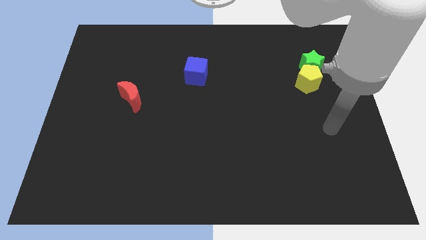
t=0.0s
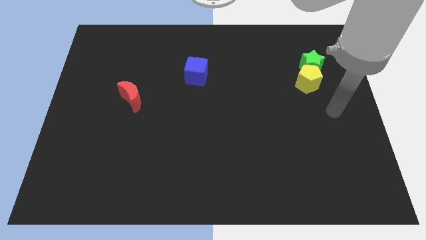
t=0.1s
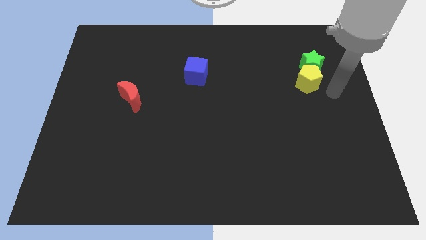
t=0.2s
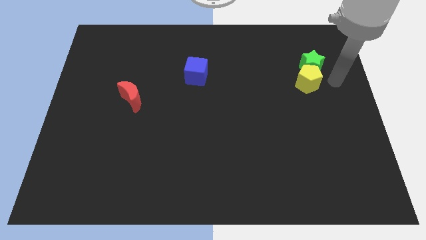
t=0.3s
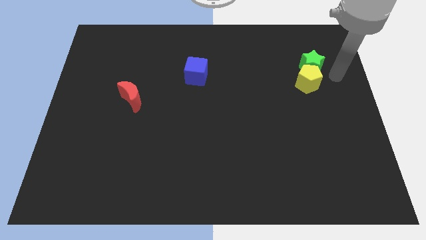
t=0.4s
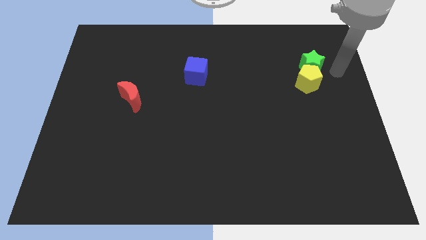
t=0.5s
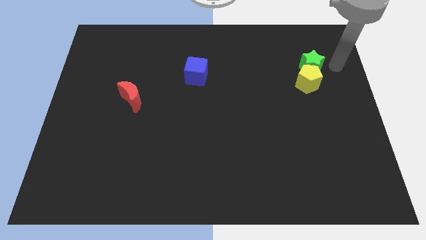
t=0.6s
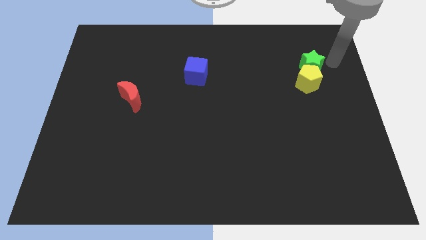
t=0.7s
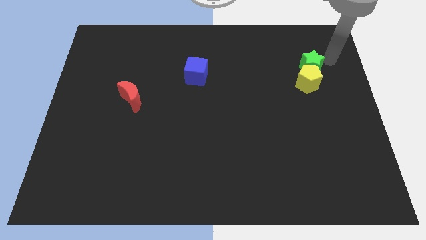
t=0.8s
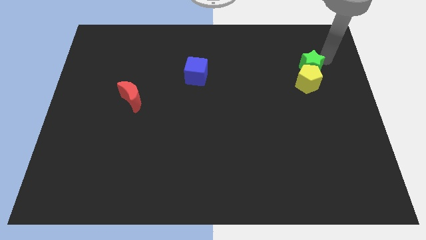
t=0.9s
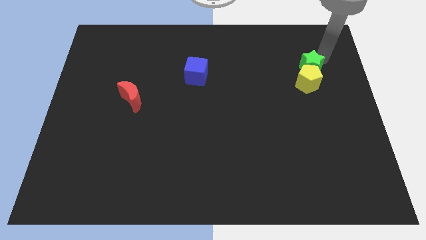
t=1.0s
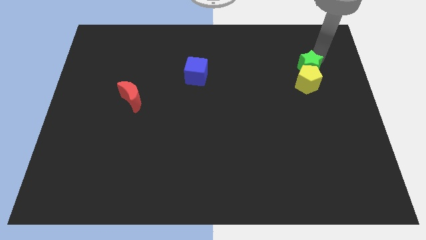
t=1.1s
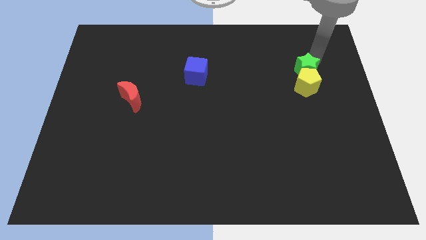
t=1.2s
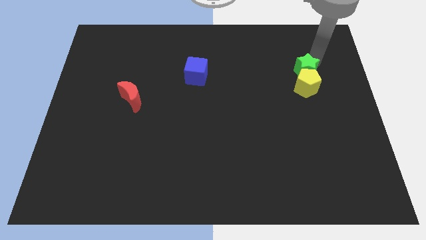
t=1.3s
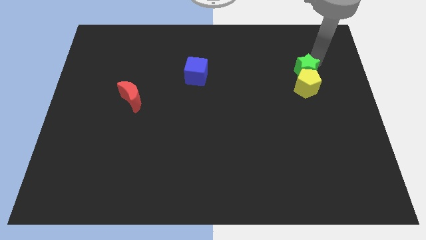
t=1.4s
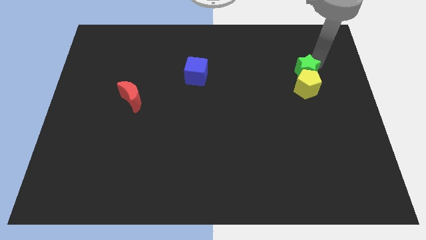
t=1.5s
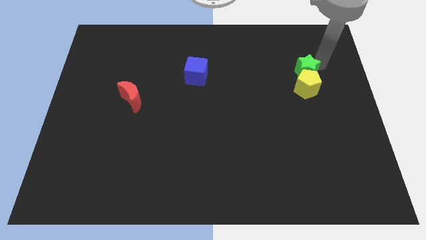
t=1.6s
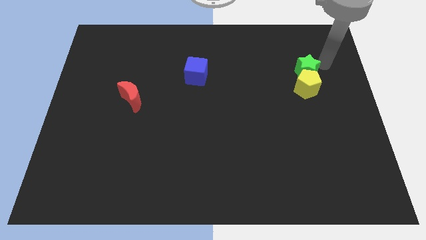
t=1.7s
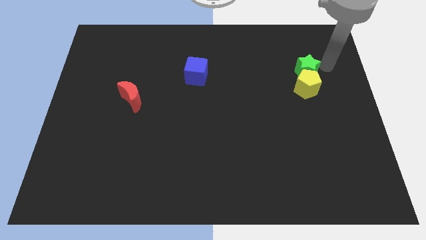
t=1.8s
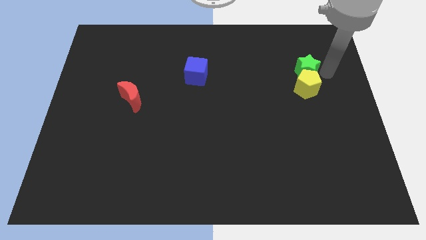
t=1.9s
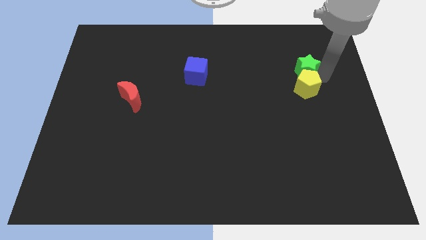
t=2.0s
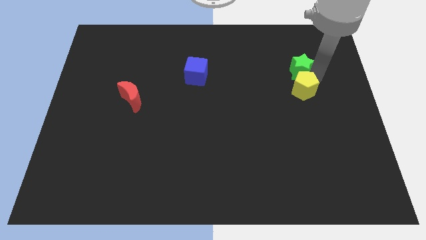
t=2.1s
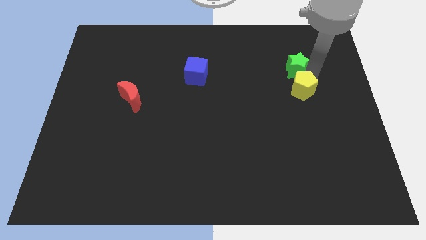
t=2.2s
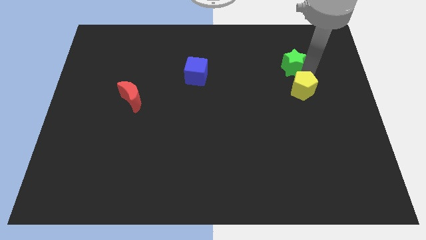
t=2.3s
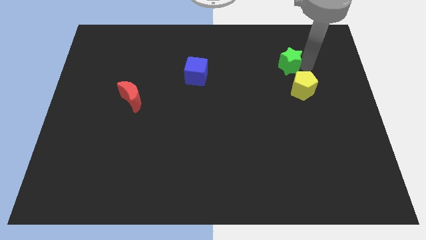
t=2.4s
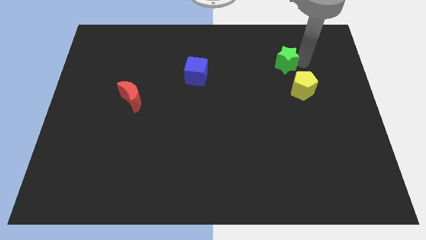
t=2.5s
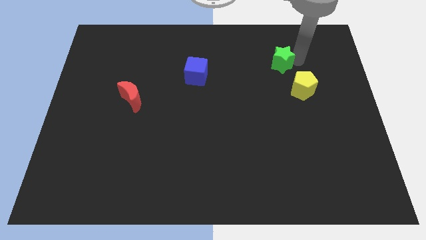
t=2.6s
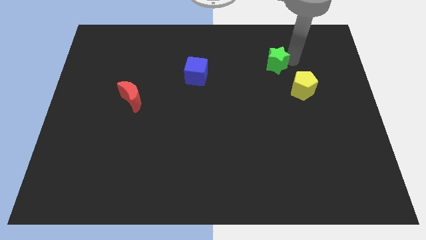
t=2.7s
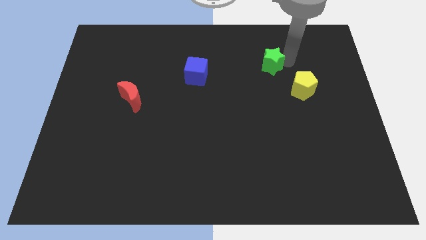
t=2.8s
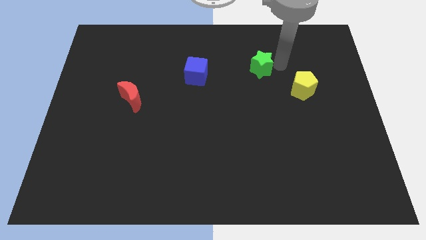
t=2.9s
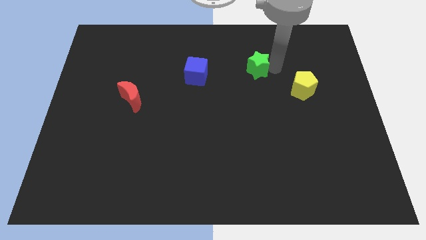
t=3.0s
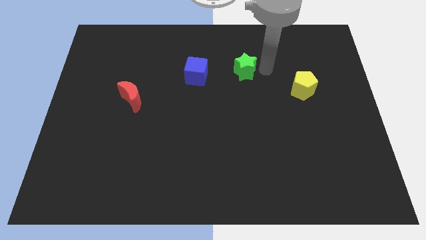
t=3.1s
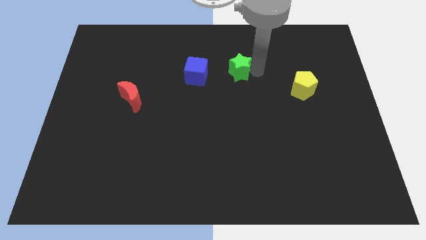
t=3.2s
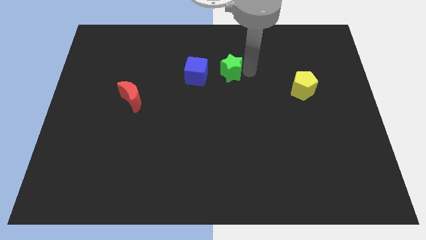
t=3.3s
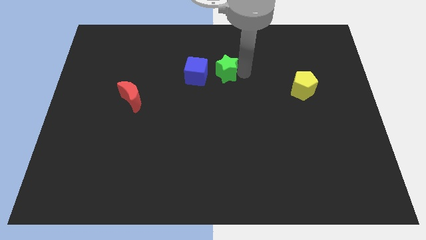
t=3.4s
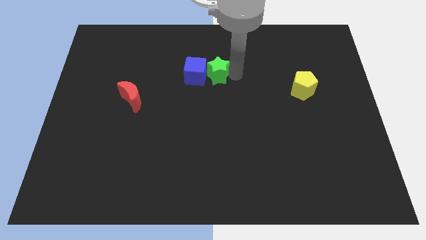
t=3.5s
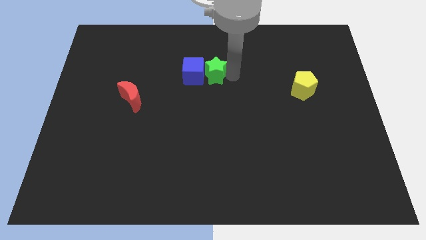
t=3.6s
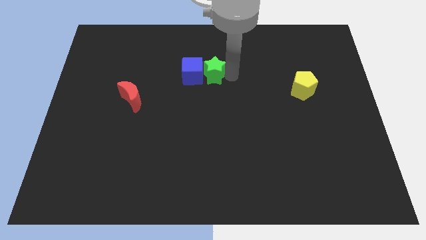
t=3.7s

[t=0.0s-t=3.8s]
push the green block towards the blue block

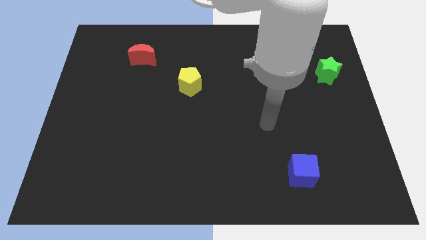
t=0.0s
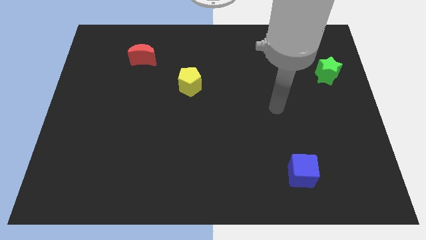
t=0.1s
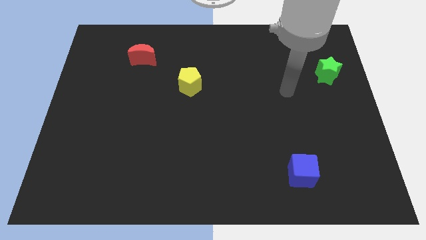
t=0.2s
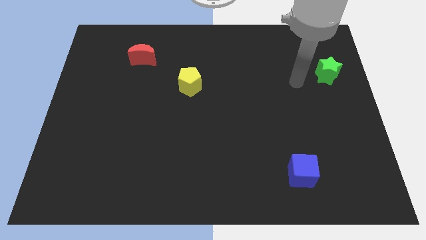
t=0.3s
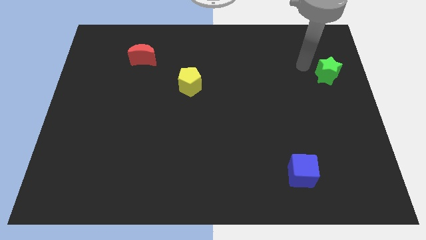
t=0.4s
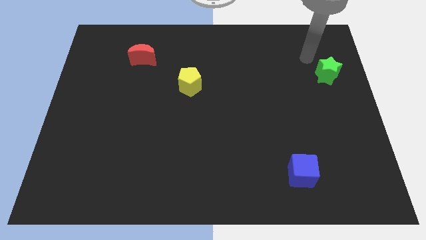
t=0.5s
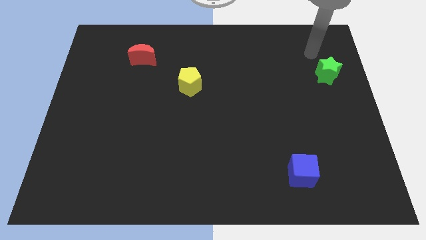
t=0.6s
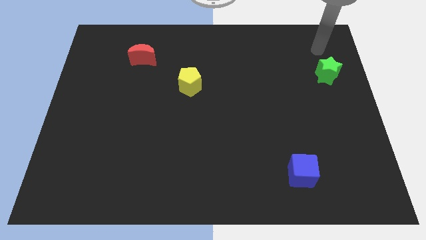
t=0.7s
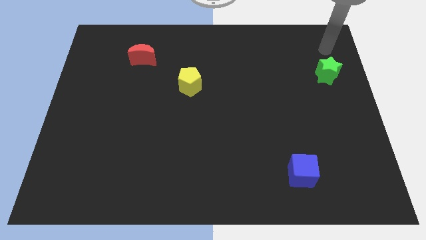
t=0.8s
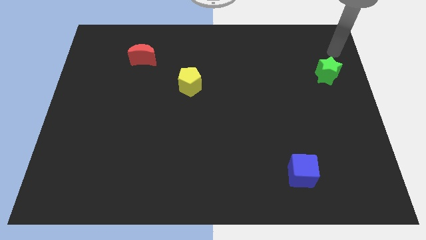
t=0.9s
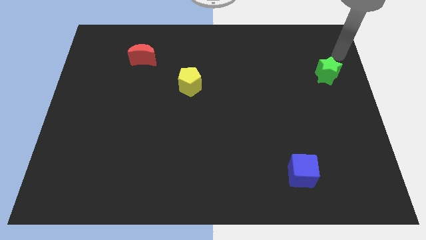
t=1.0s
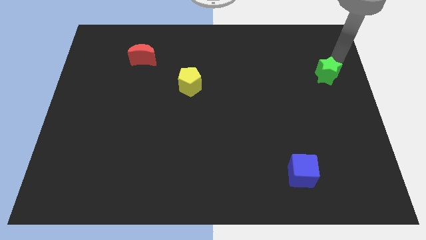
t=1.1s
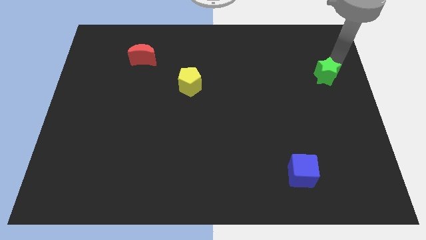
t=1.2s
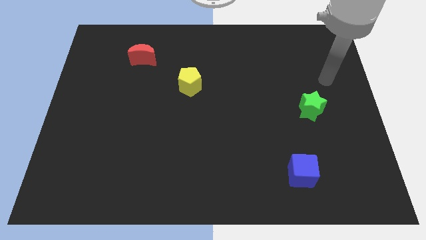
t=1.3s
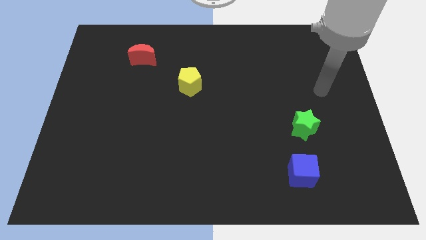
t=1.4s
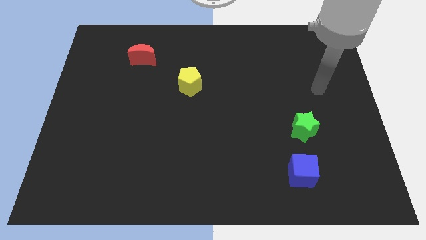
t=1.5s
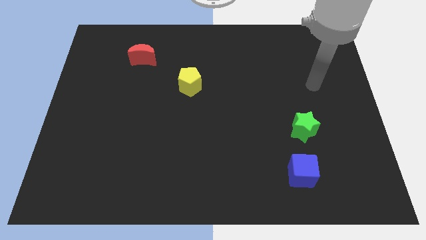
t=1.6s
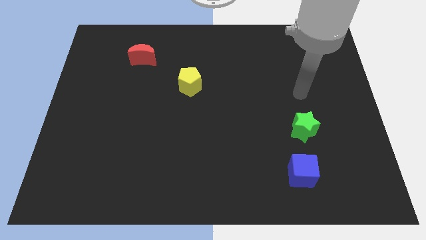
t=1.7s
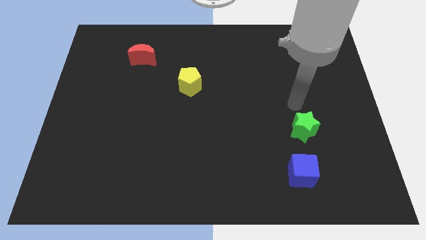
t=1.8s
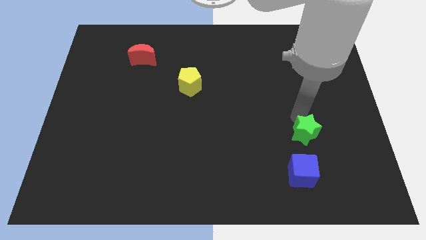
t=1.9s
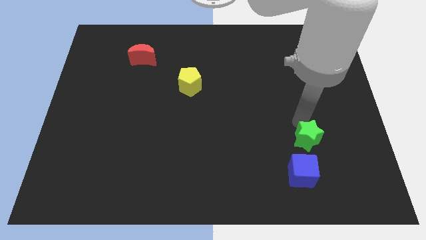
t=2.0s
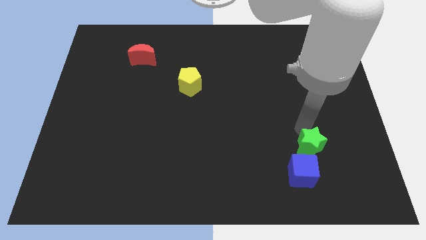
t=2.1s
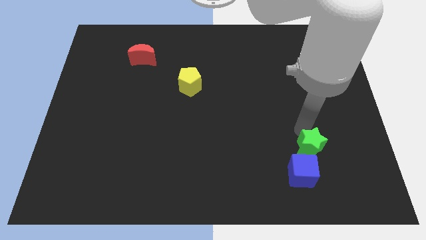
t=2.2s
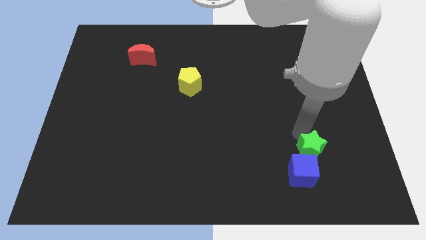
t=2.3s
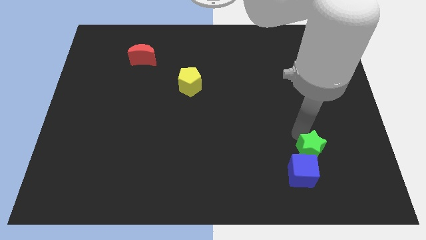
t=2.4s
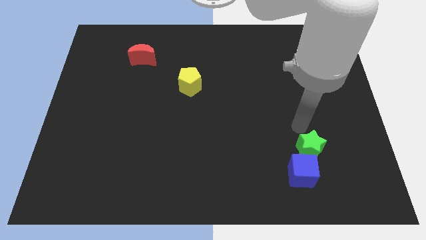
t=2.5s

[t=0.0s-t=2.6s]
push the green star next to the blue block

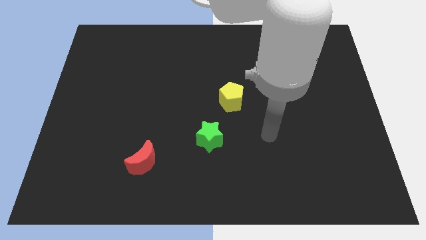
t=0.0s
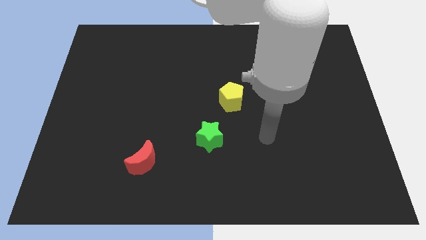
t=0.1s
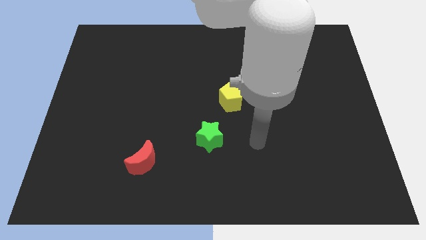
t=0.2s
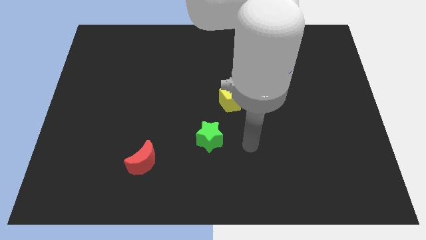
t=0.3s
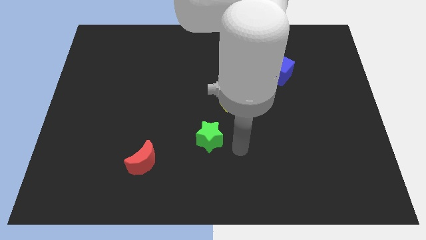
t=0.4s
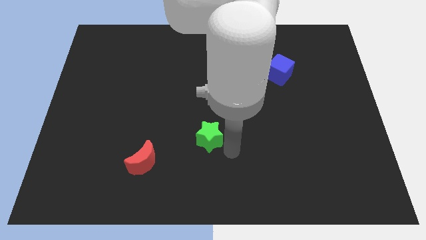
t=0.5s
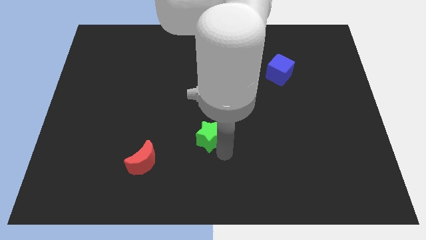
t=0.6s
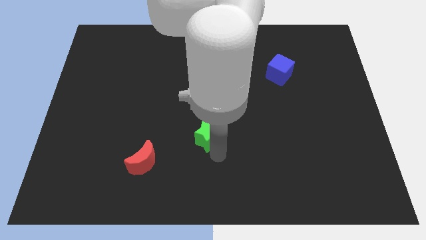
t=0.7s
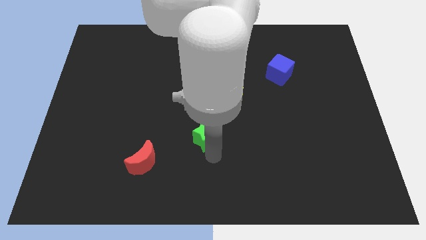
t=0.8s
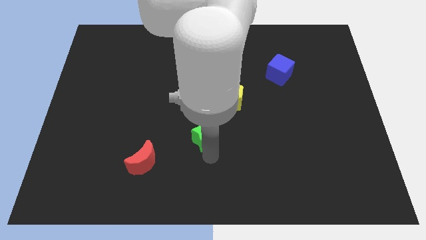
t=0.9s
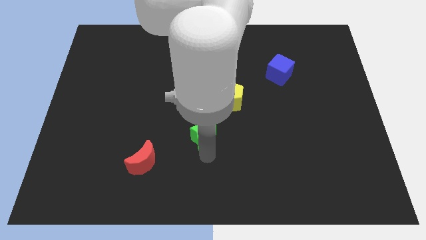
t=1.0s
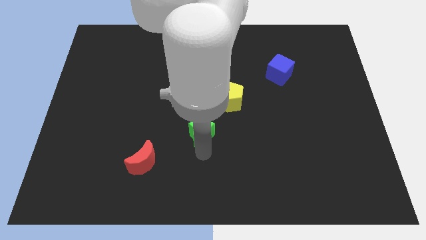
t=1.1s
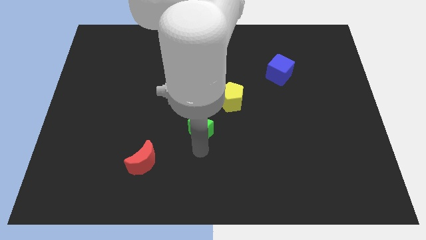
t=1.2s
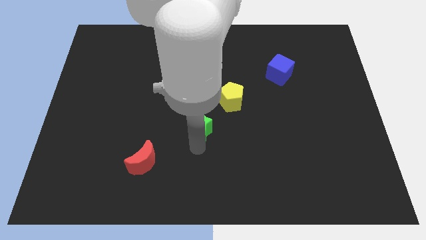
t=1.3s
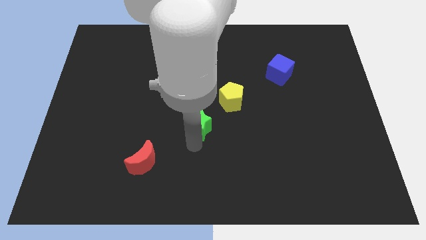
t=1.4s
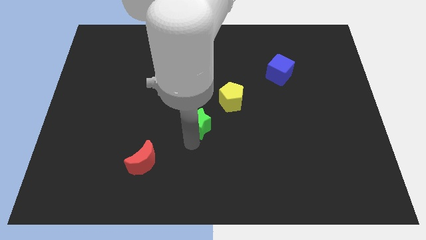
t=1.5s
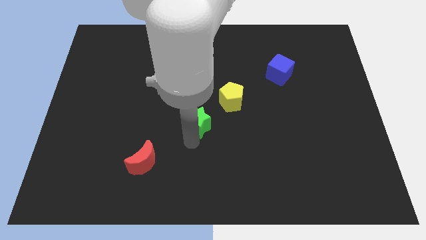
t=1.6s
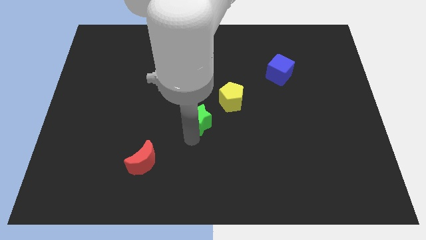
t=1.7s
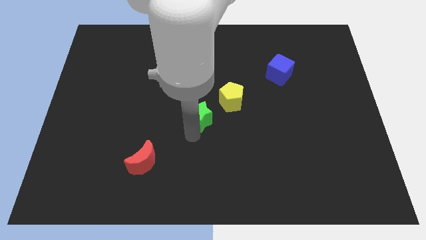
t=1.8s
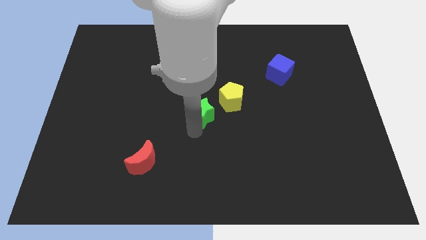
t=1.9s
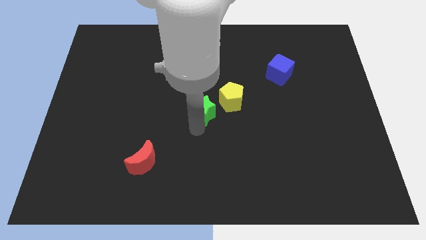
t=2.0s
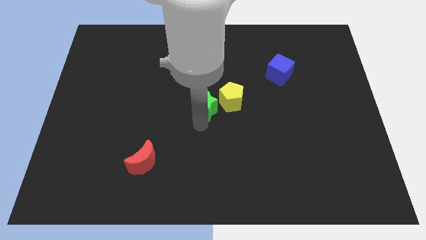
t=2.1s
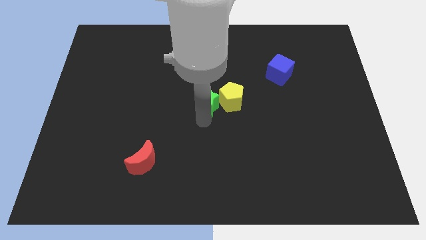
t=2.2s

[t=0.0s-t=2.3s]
put the green star towards the yellow pentagon
